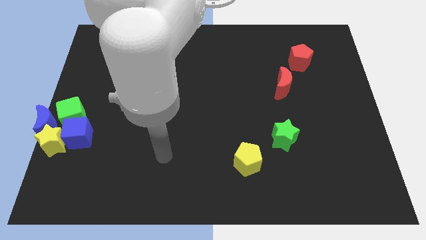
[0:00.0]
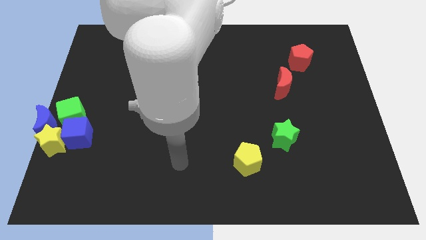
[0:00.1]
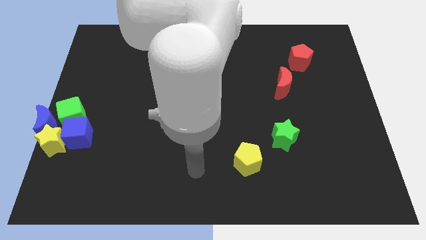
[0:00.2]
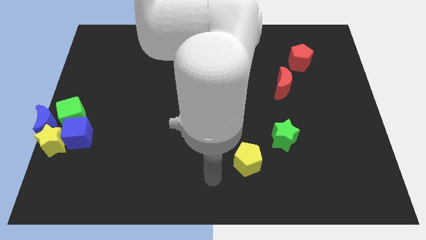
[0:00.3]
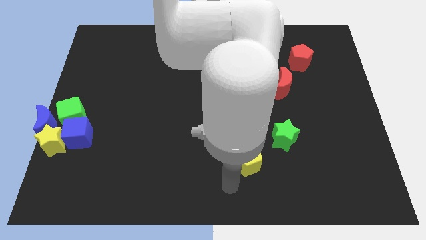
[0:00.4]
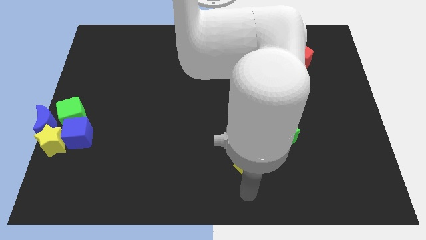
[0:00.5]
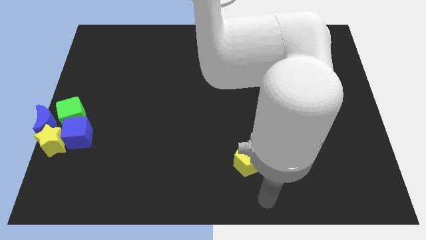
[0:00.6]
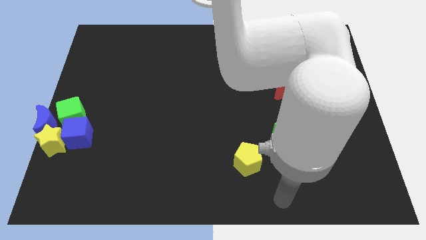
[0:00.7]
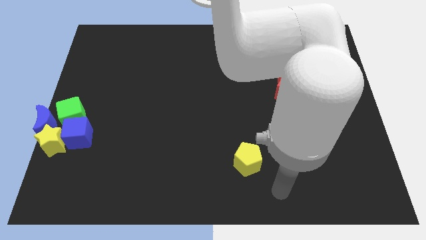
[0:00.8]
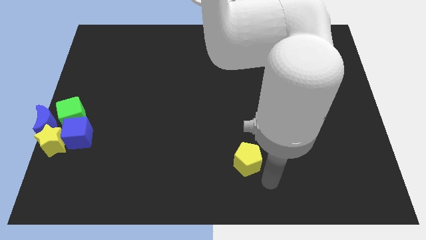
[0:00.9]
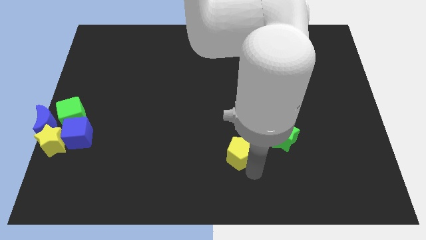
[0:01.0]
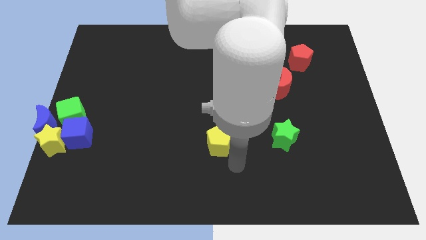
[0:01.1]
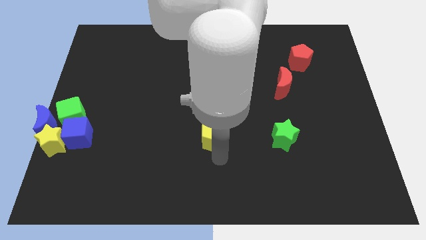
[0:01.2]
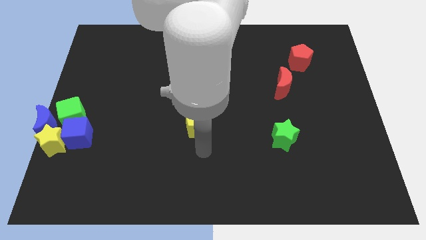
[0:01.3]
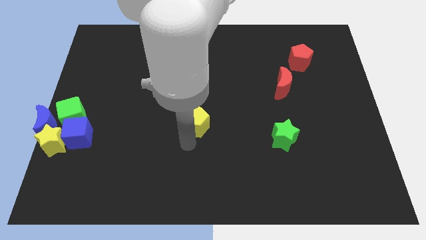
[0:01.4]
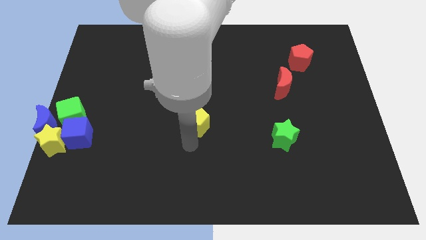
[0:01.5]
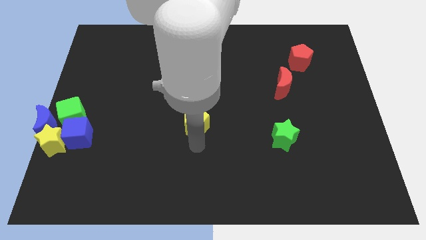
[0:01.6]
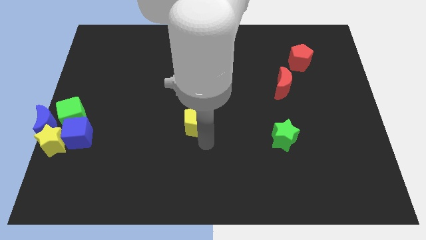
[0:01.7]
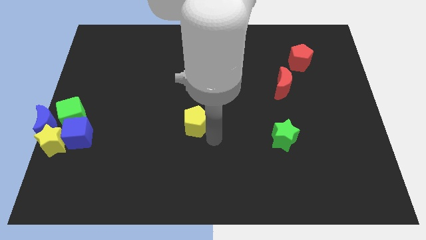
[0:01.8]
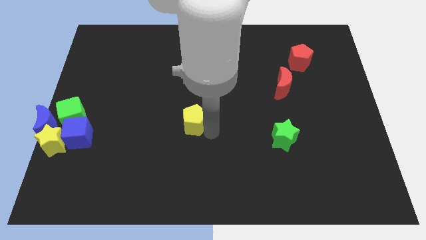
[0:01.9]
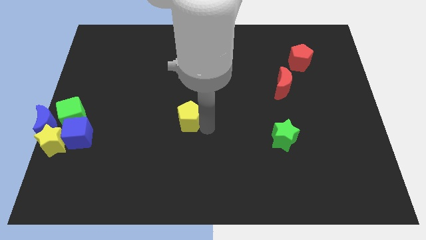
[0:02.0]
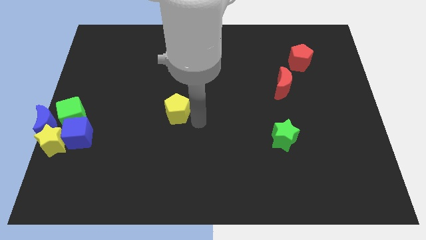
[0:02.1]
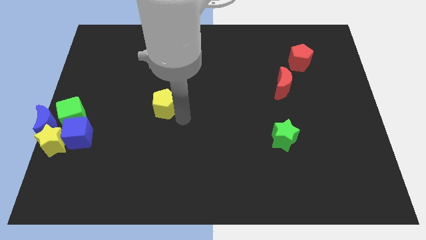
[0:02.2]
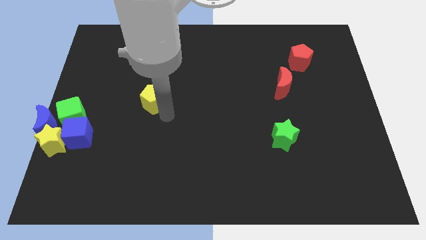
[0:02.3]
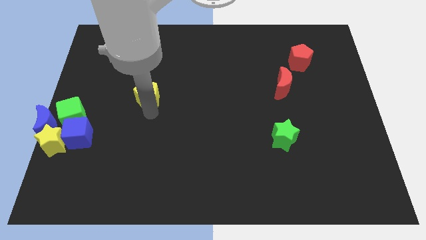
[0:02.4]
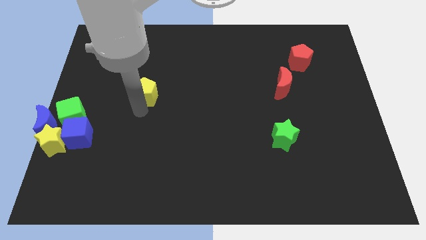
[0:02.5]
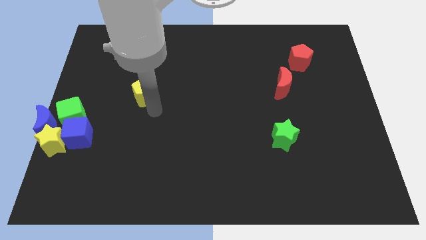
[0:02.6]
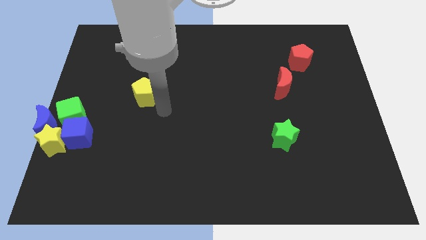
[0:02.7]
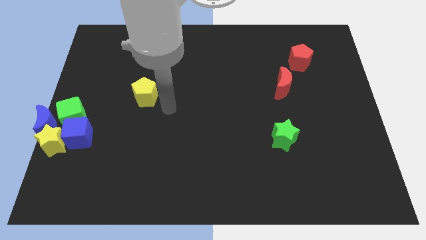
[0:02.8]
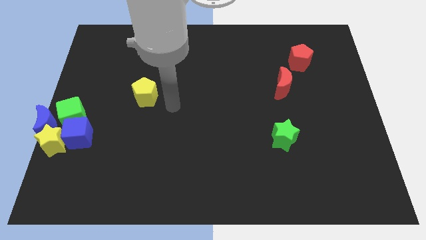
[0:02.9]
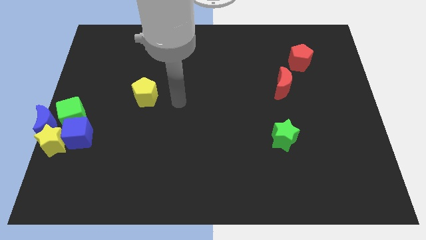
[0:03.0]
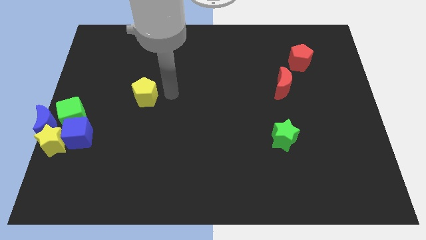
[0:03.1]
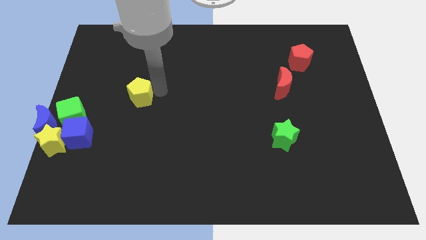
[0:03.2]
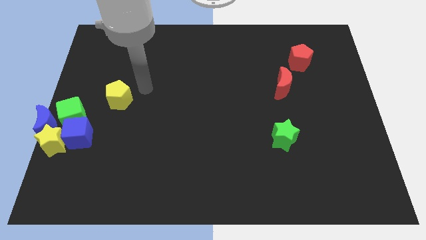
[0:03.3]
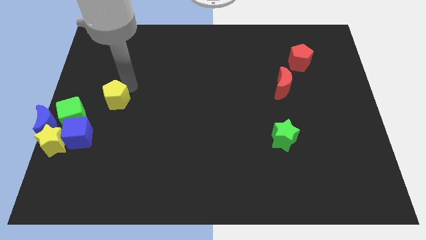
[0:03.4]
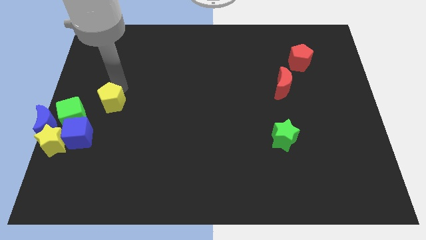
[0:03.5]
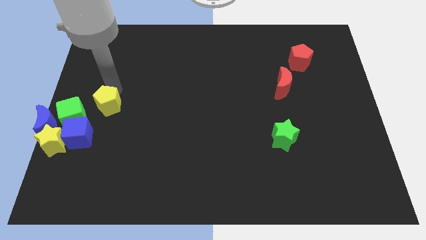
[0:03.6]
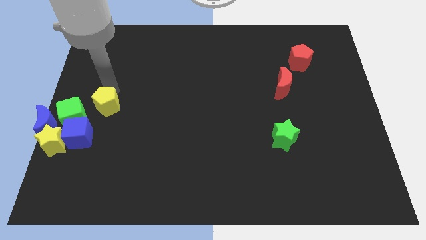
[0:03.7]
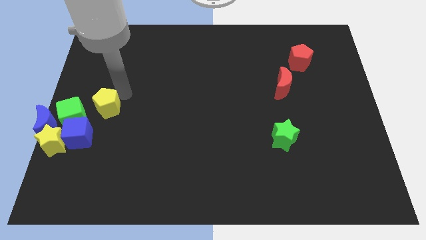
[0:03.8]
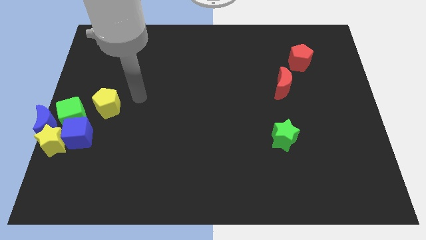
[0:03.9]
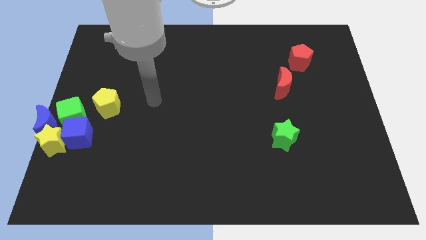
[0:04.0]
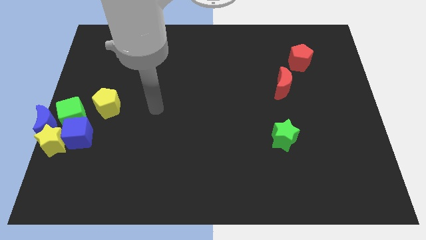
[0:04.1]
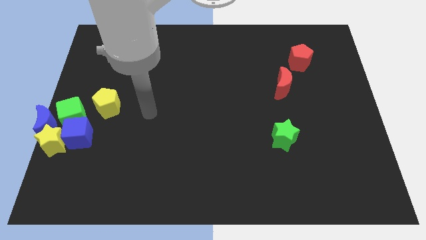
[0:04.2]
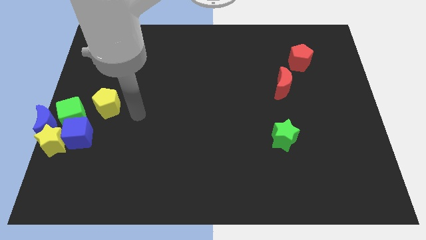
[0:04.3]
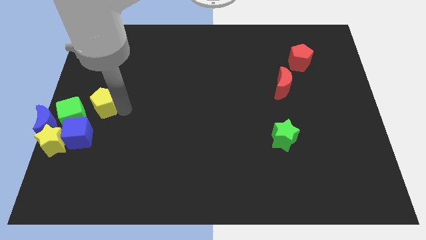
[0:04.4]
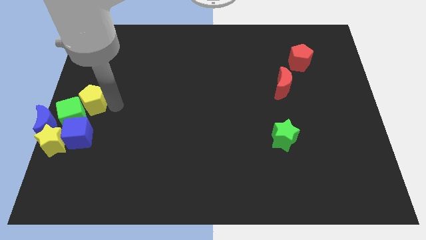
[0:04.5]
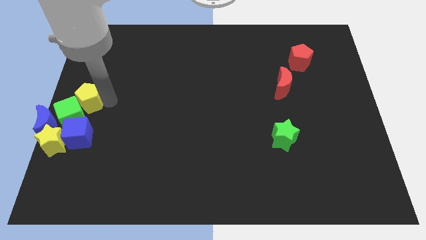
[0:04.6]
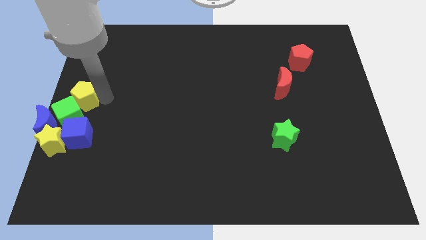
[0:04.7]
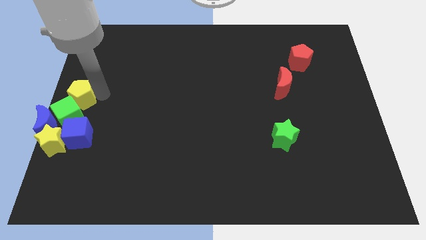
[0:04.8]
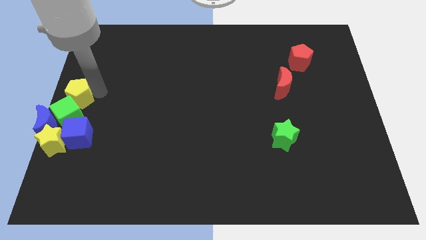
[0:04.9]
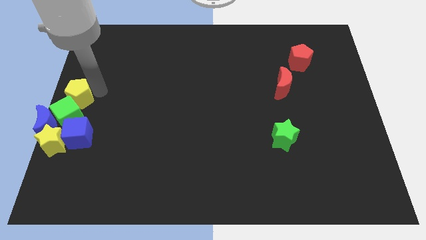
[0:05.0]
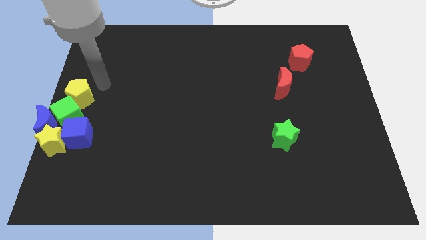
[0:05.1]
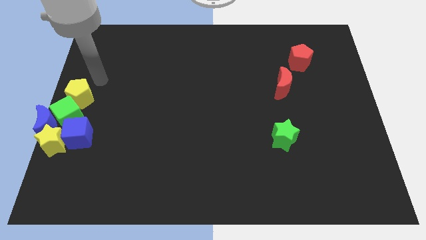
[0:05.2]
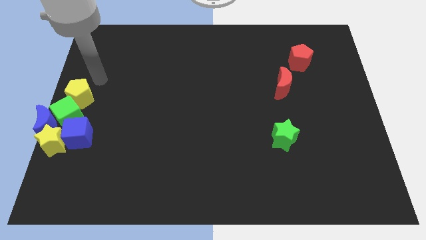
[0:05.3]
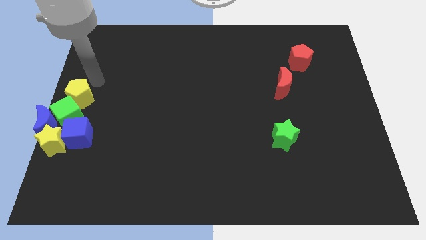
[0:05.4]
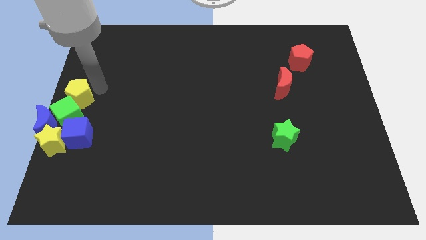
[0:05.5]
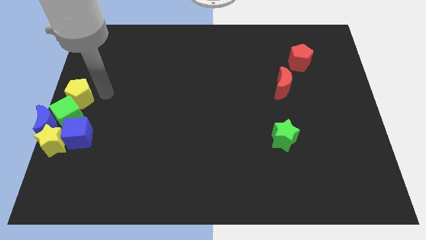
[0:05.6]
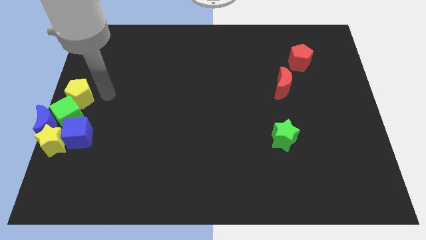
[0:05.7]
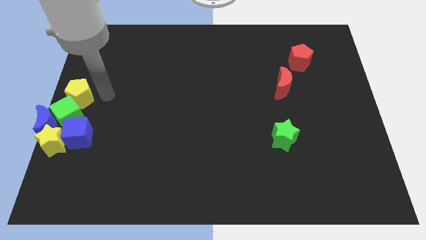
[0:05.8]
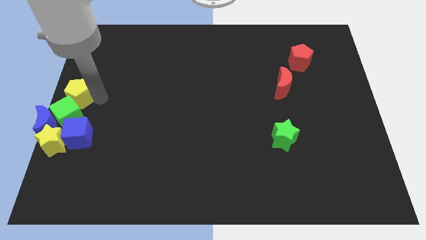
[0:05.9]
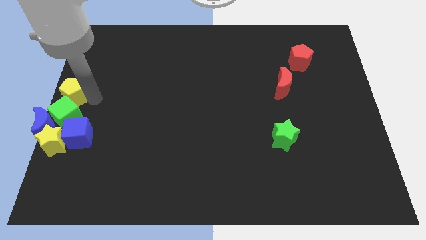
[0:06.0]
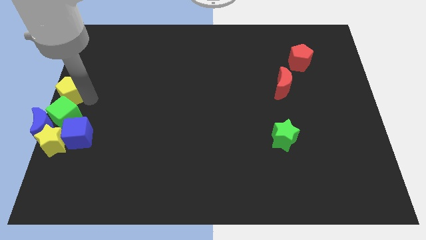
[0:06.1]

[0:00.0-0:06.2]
push the yellow pentagon into the group of blocks

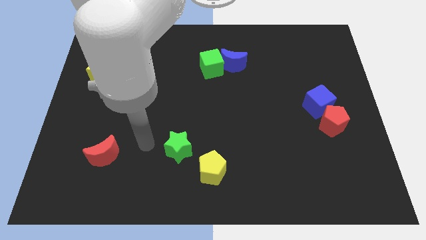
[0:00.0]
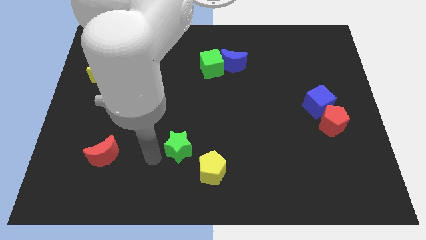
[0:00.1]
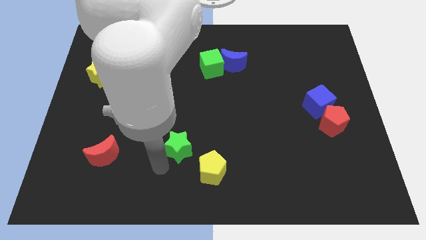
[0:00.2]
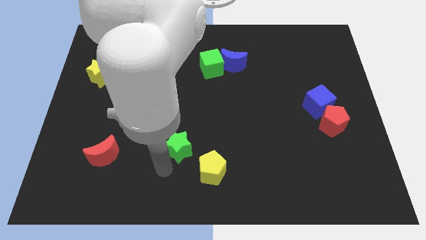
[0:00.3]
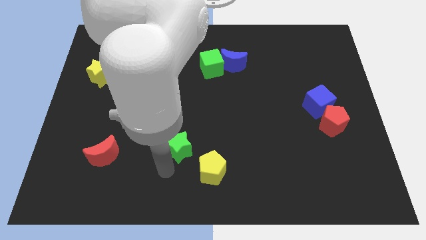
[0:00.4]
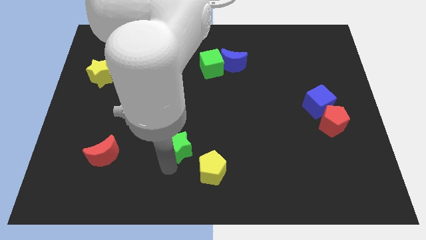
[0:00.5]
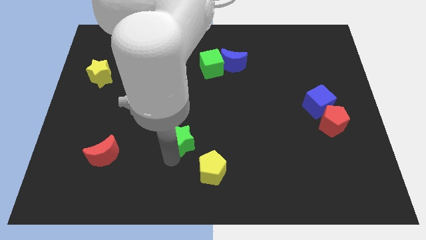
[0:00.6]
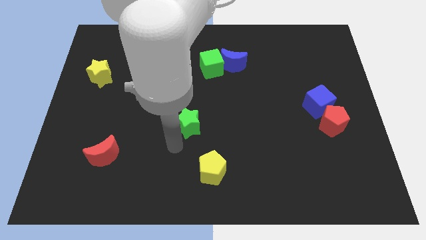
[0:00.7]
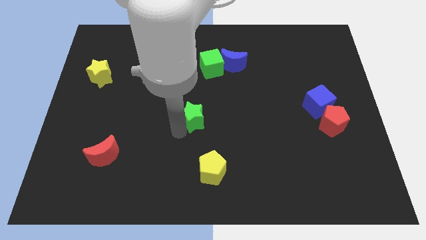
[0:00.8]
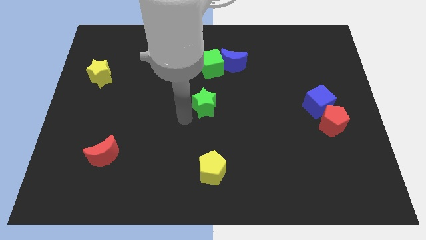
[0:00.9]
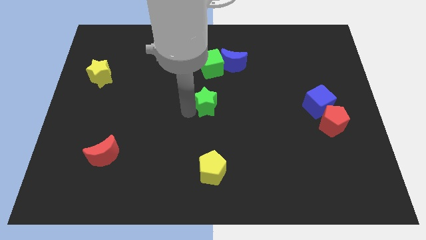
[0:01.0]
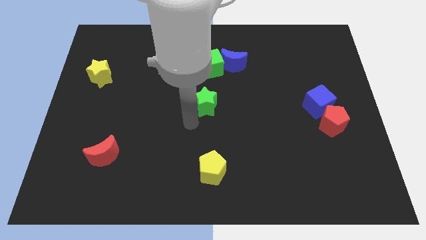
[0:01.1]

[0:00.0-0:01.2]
place the green star in between the green cube and the yellow pentagon

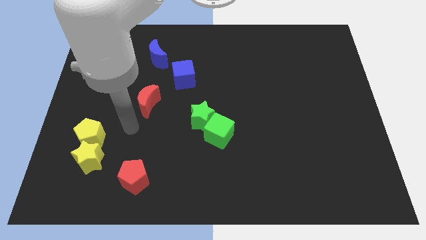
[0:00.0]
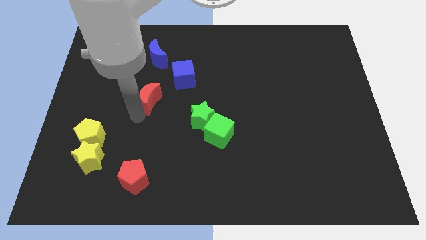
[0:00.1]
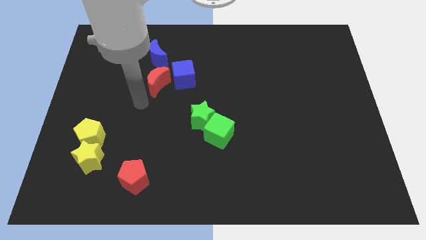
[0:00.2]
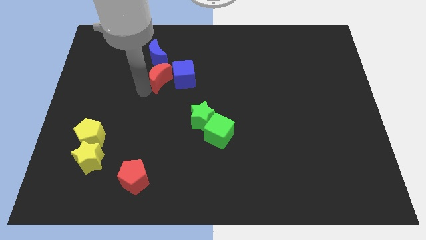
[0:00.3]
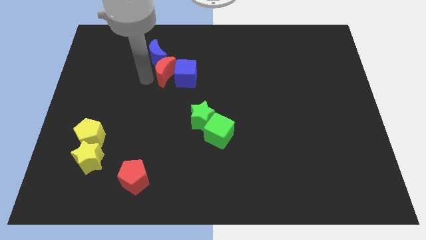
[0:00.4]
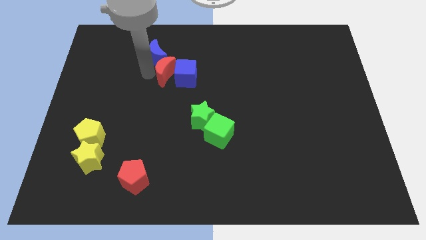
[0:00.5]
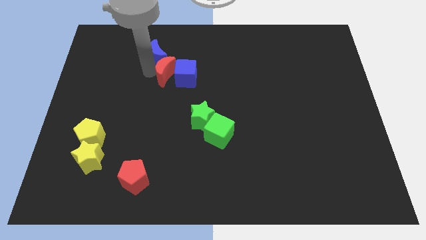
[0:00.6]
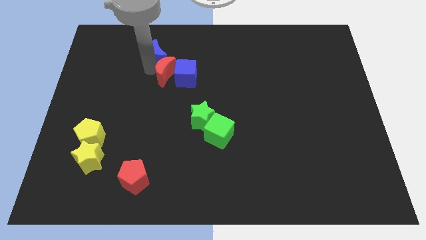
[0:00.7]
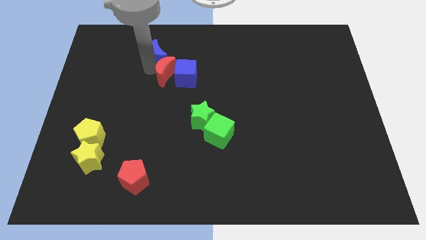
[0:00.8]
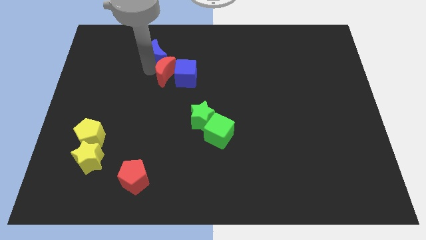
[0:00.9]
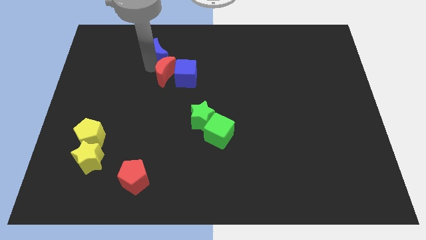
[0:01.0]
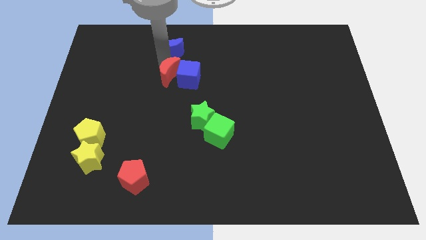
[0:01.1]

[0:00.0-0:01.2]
slide the red moon into the blue cube

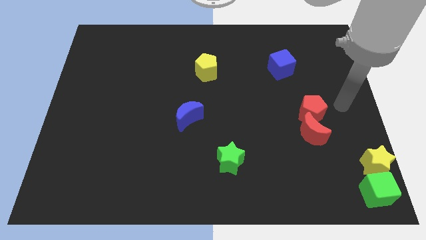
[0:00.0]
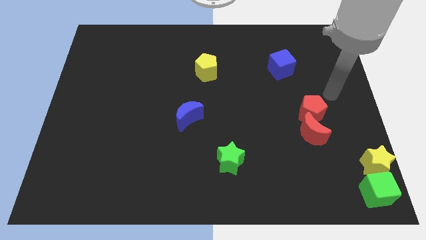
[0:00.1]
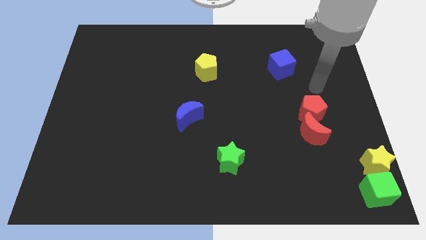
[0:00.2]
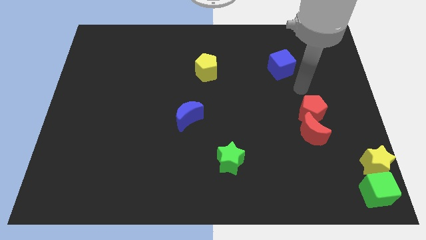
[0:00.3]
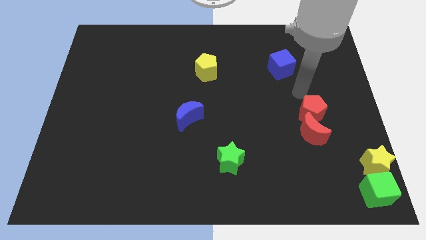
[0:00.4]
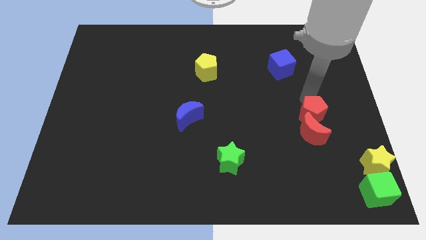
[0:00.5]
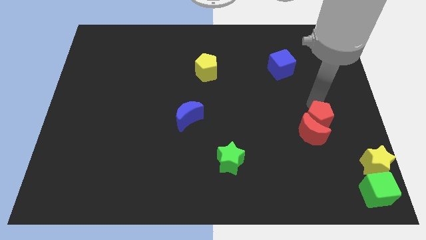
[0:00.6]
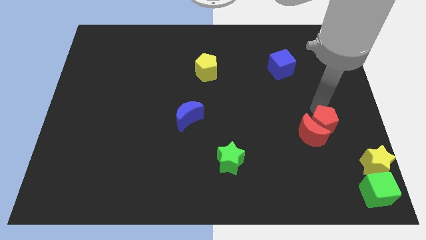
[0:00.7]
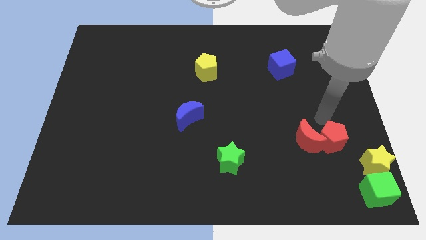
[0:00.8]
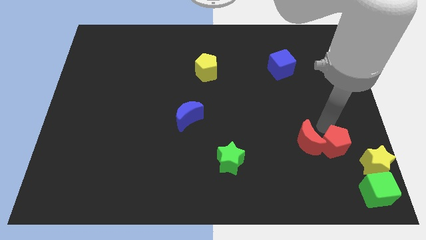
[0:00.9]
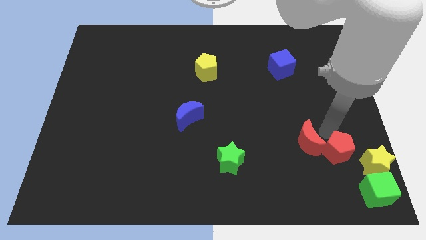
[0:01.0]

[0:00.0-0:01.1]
move the red pentagon to the right of the red crescent
